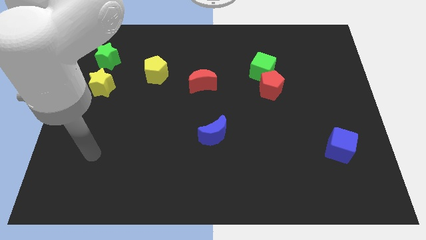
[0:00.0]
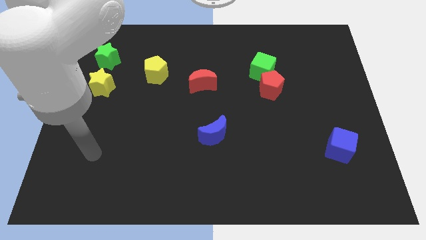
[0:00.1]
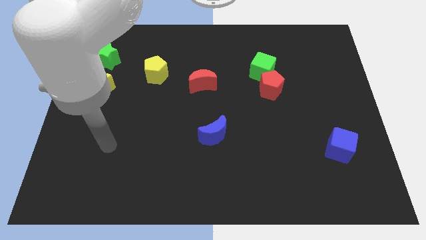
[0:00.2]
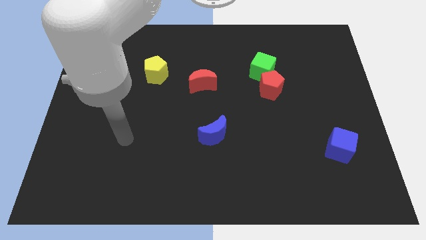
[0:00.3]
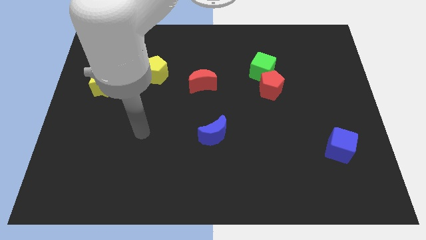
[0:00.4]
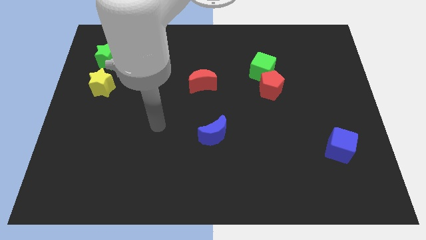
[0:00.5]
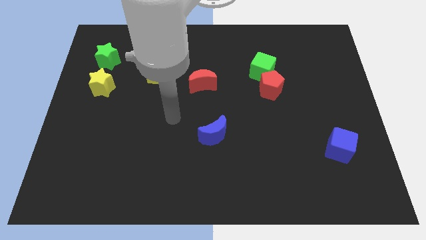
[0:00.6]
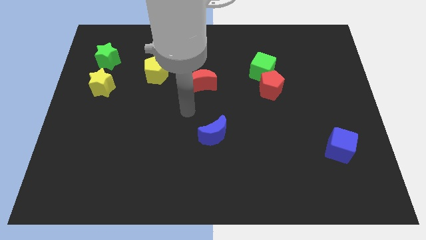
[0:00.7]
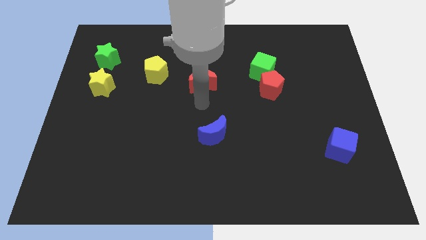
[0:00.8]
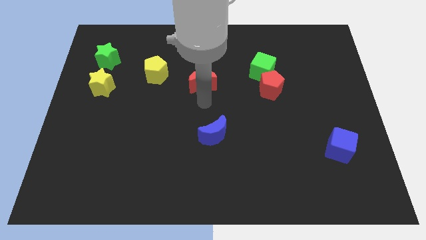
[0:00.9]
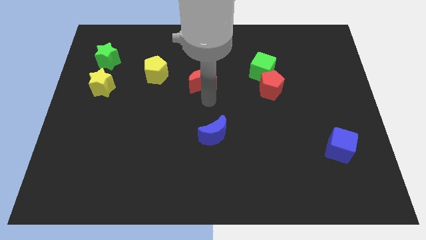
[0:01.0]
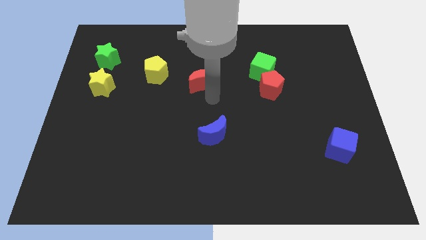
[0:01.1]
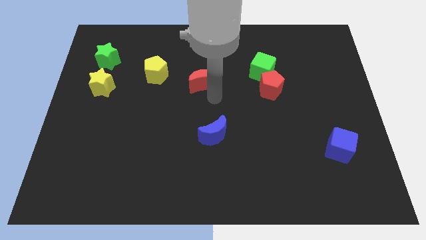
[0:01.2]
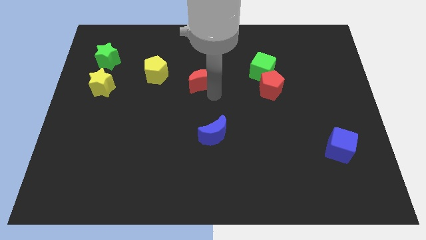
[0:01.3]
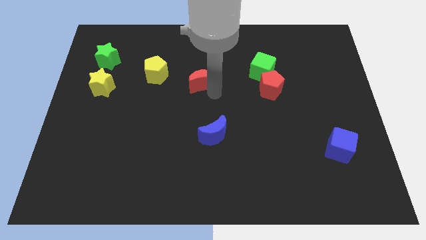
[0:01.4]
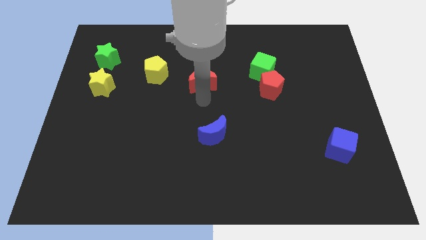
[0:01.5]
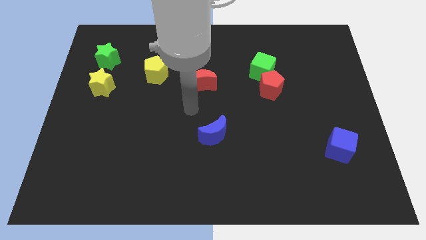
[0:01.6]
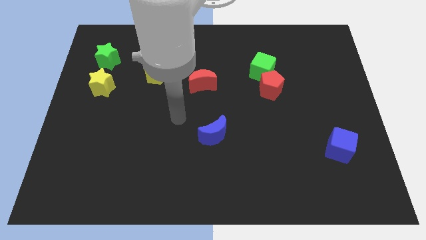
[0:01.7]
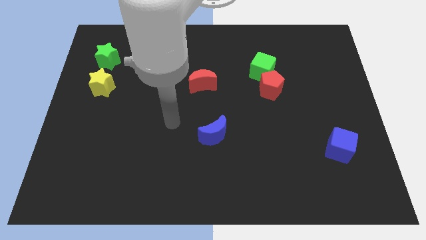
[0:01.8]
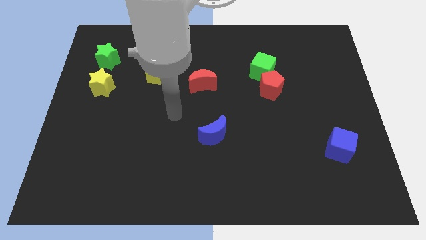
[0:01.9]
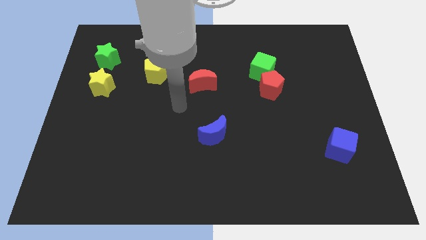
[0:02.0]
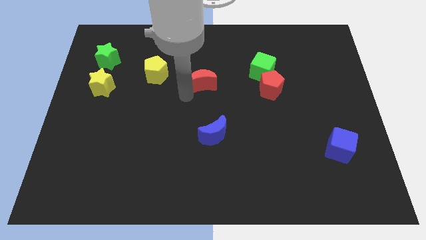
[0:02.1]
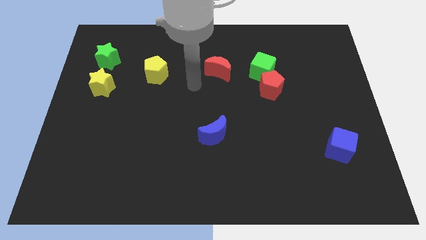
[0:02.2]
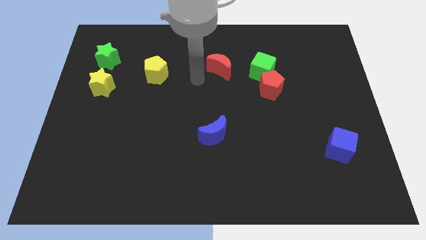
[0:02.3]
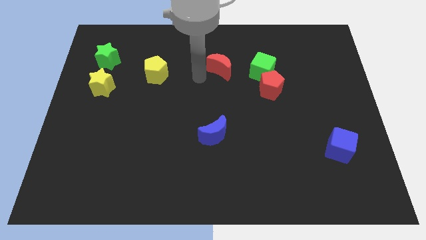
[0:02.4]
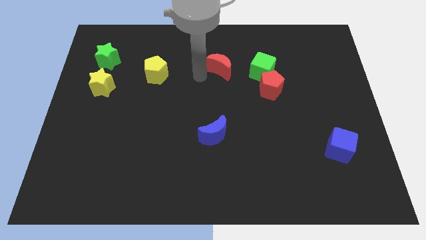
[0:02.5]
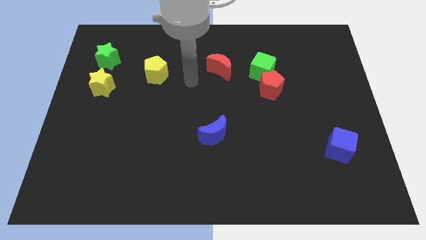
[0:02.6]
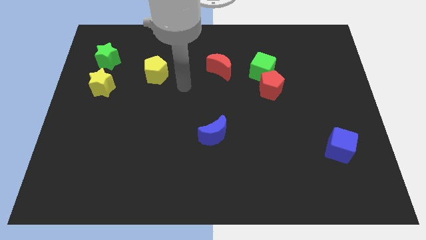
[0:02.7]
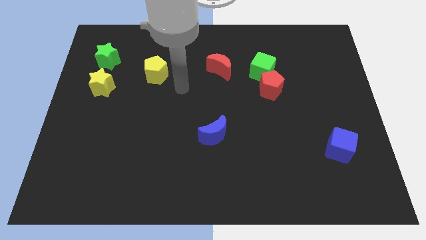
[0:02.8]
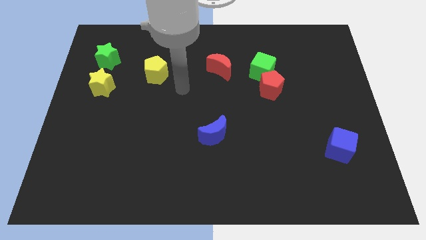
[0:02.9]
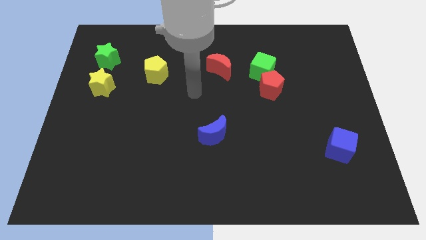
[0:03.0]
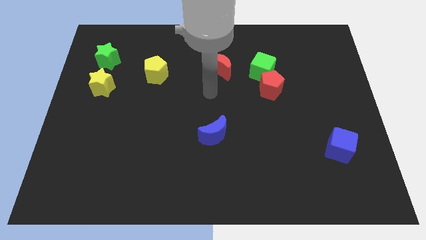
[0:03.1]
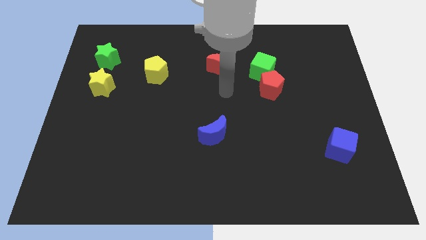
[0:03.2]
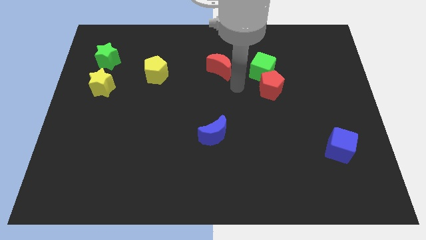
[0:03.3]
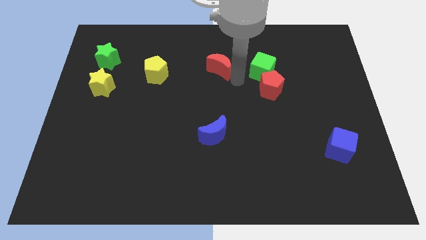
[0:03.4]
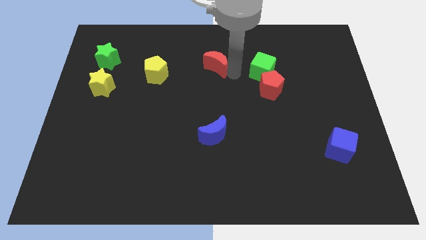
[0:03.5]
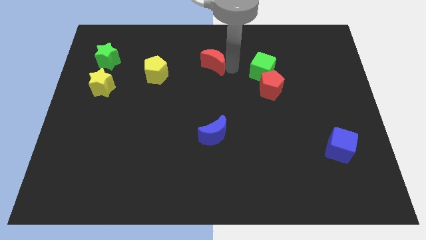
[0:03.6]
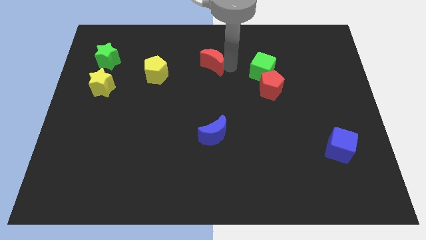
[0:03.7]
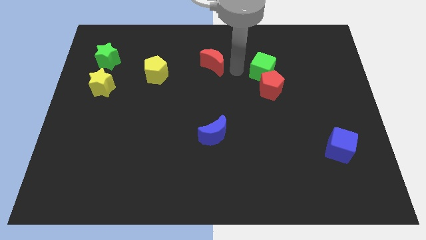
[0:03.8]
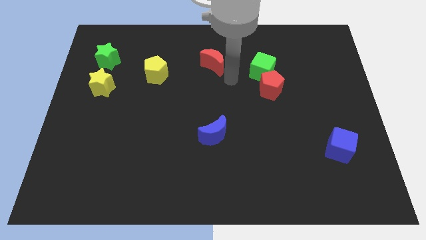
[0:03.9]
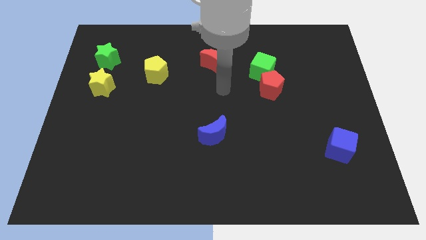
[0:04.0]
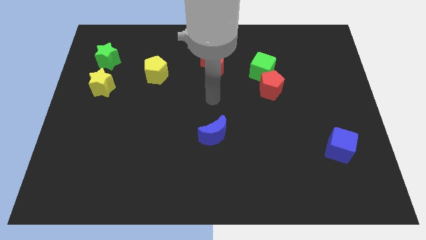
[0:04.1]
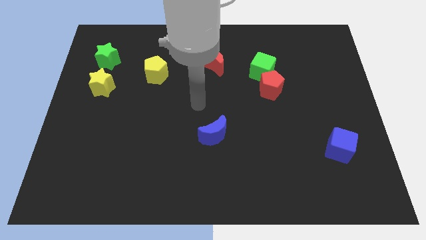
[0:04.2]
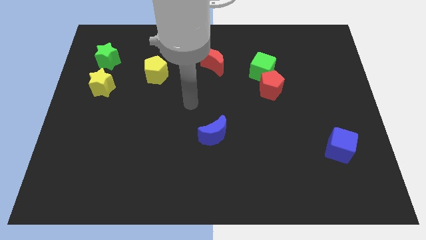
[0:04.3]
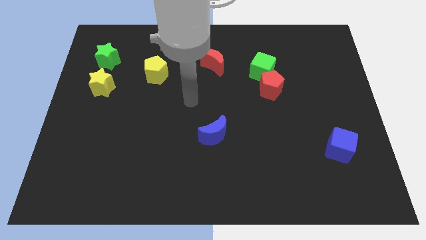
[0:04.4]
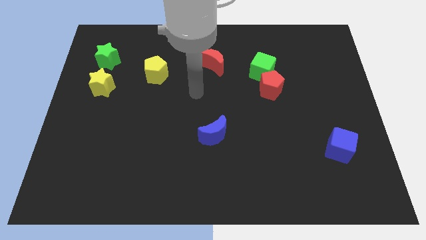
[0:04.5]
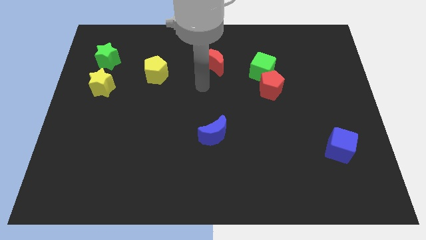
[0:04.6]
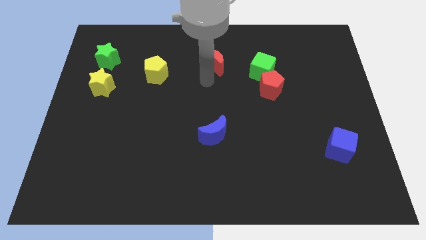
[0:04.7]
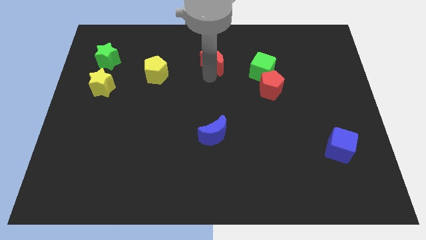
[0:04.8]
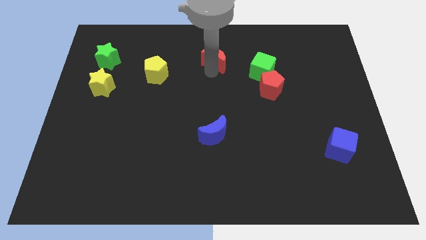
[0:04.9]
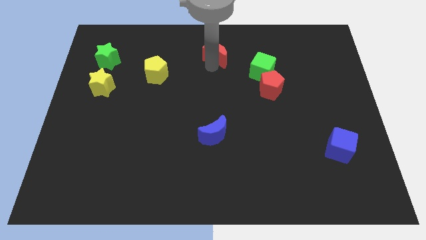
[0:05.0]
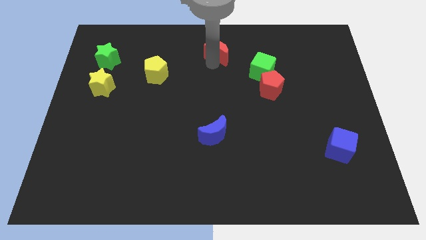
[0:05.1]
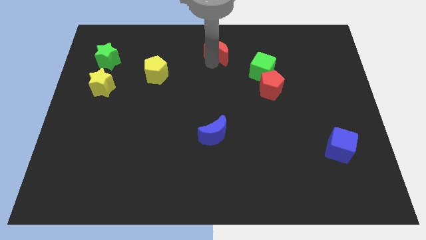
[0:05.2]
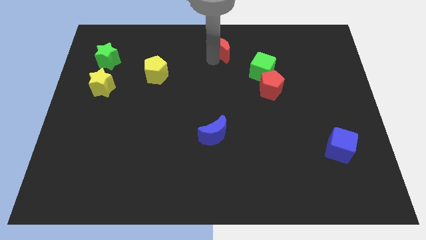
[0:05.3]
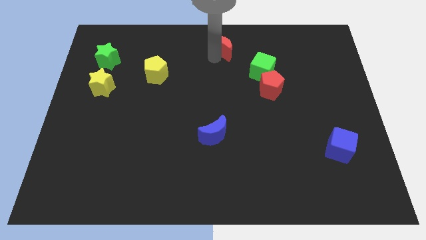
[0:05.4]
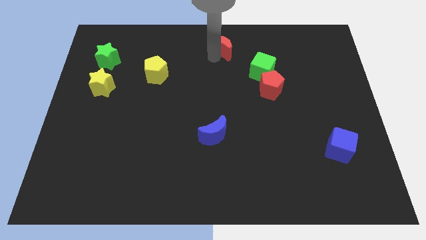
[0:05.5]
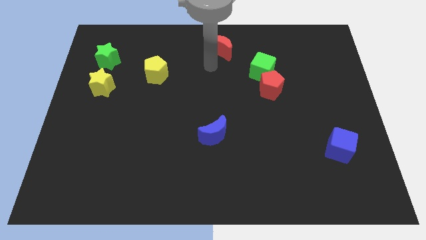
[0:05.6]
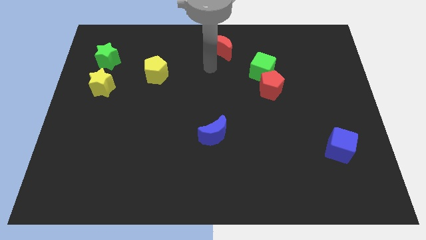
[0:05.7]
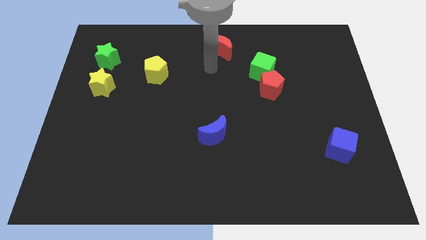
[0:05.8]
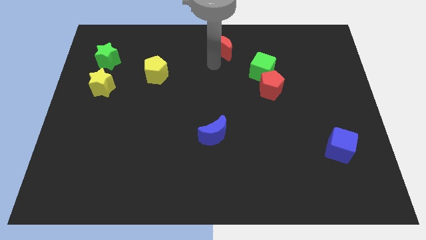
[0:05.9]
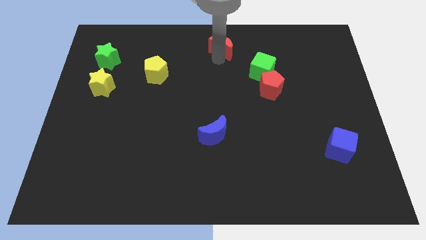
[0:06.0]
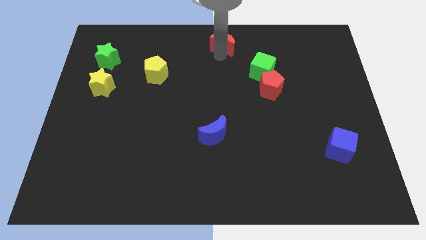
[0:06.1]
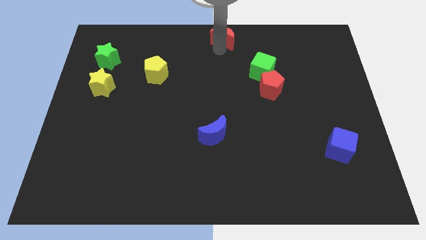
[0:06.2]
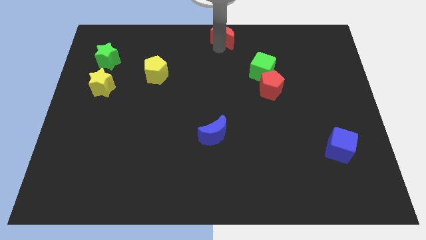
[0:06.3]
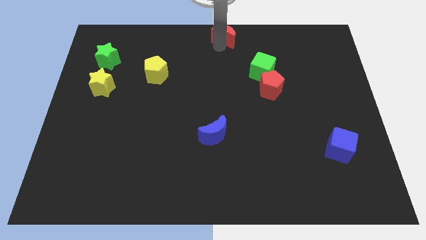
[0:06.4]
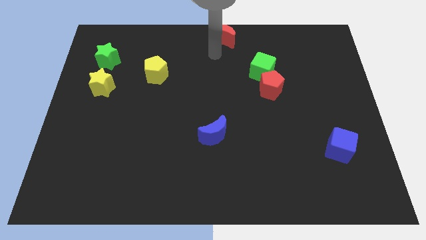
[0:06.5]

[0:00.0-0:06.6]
move the red crescent to the top center of the board

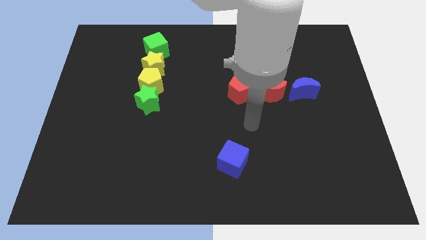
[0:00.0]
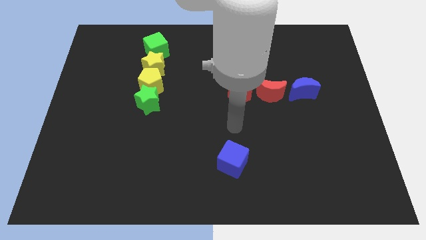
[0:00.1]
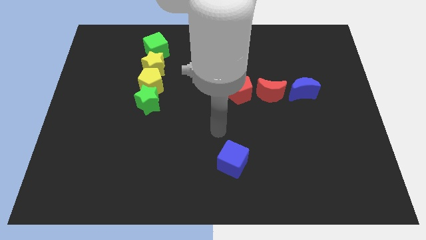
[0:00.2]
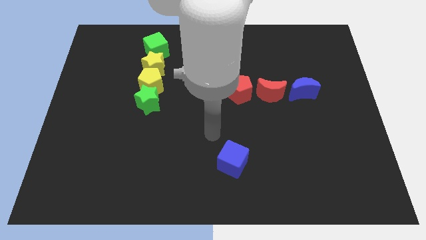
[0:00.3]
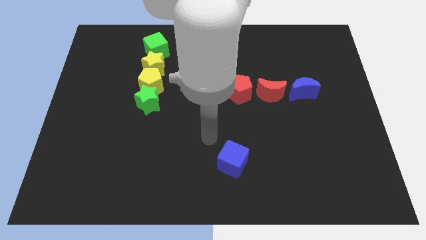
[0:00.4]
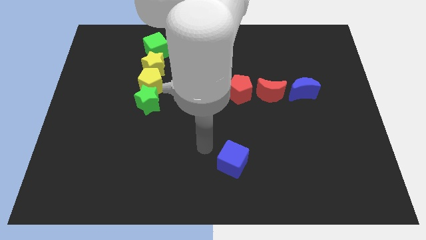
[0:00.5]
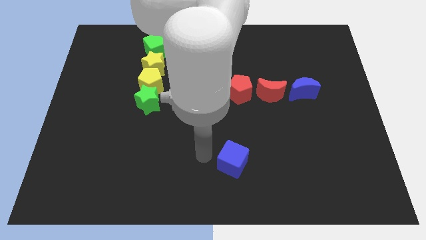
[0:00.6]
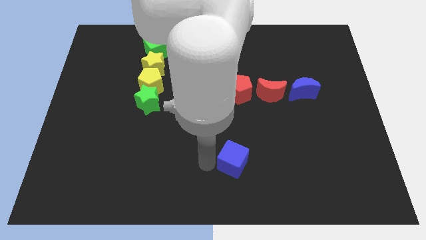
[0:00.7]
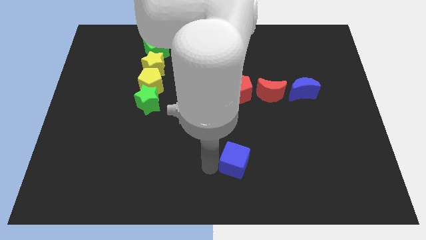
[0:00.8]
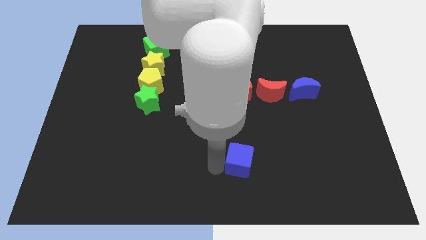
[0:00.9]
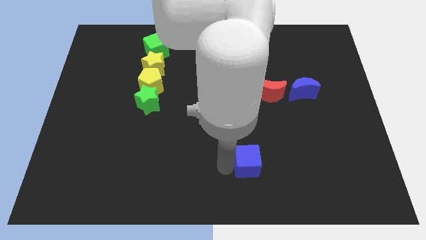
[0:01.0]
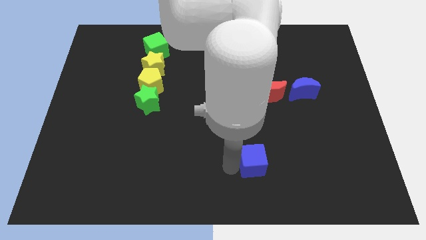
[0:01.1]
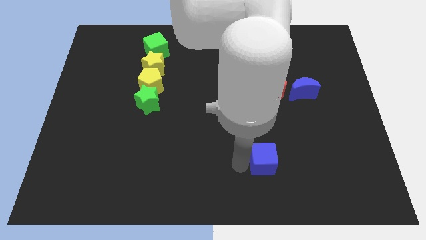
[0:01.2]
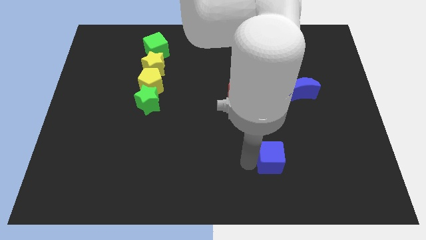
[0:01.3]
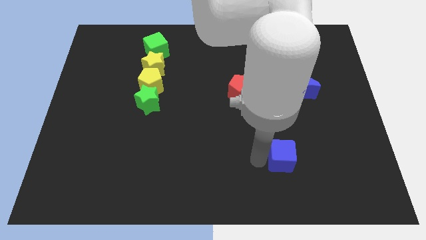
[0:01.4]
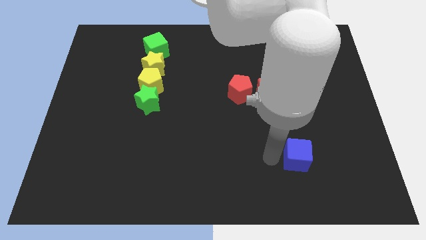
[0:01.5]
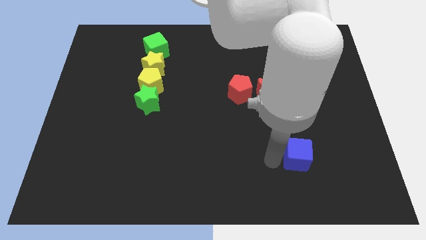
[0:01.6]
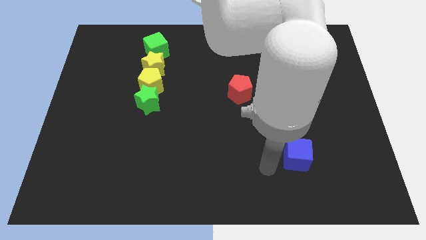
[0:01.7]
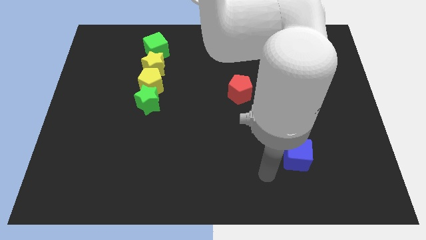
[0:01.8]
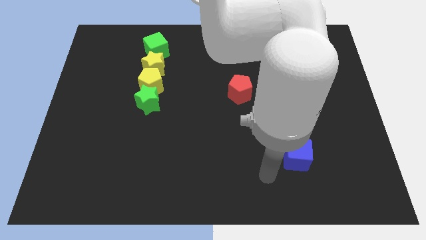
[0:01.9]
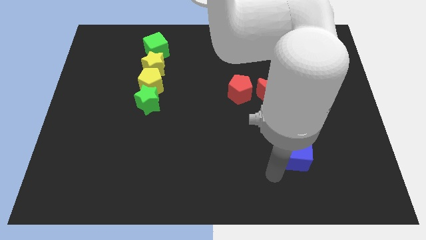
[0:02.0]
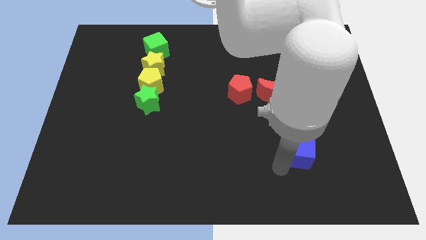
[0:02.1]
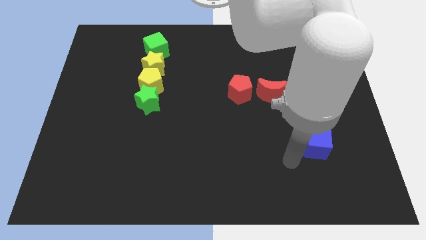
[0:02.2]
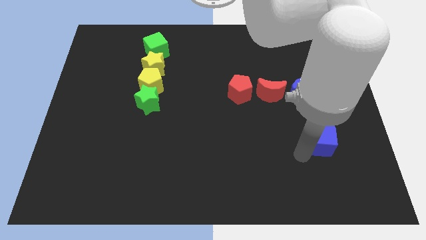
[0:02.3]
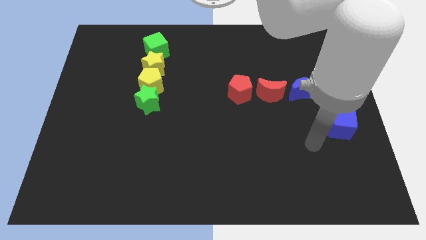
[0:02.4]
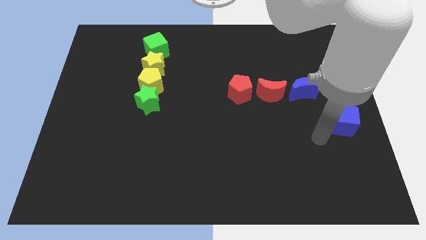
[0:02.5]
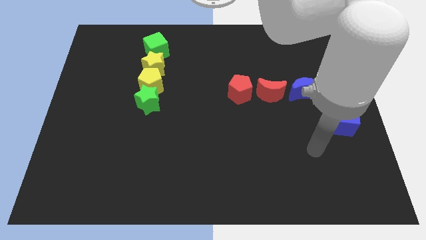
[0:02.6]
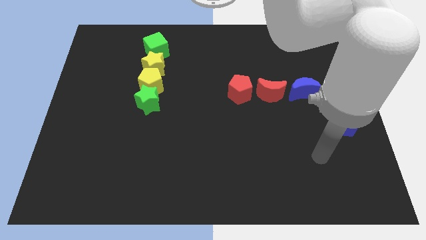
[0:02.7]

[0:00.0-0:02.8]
slide the blue cube to the bottom right of the blue moon
